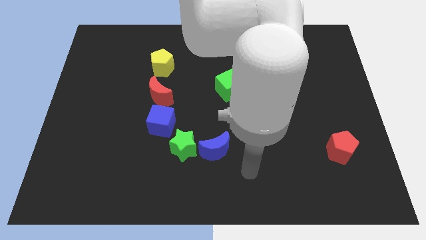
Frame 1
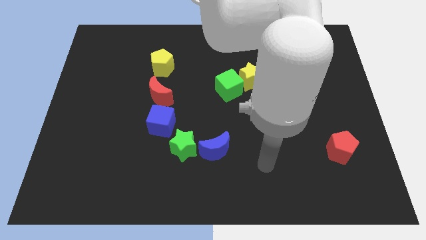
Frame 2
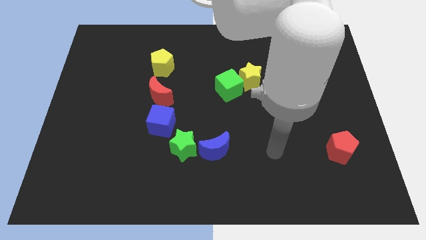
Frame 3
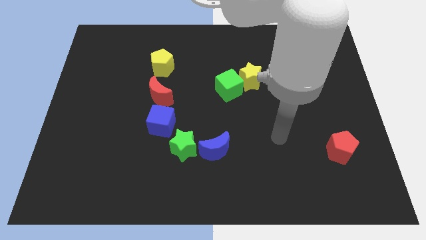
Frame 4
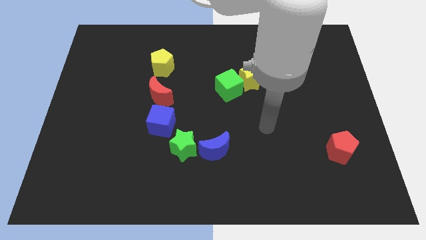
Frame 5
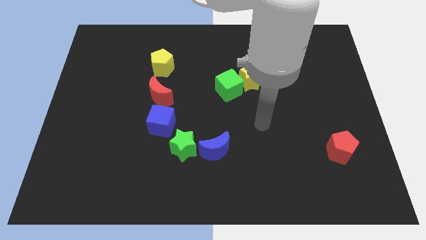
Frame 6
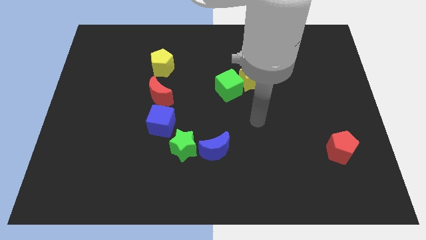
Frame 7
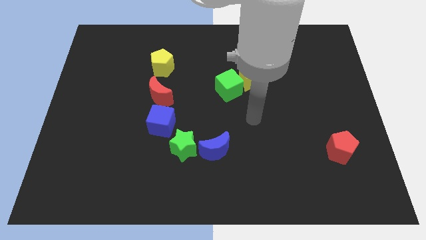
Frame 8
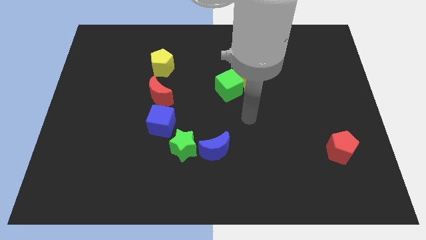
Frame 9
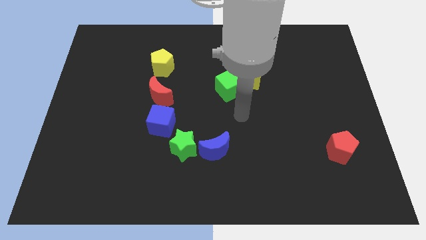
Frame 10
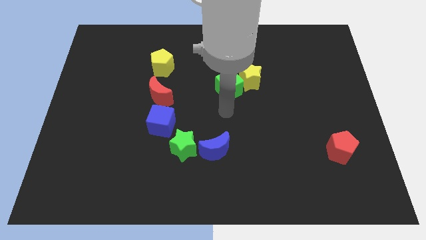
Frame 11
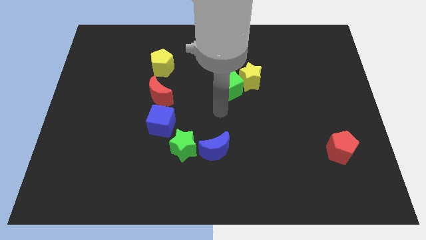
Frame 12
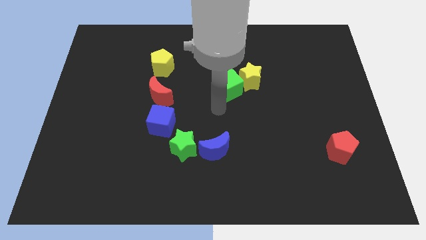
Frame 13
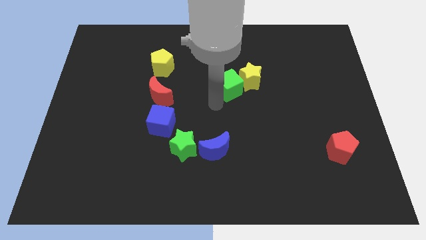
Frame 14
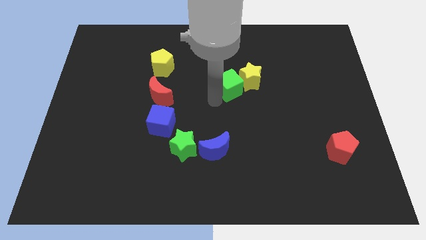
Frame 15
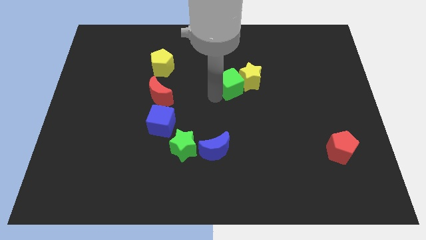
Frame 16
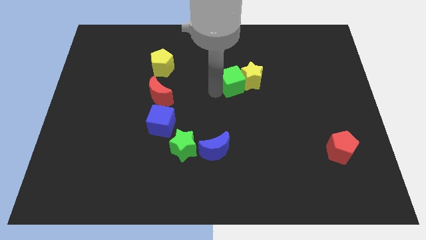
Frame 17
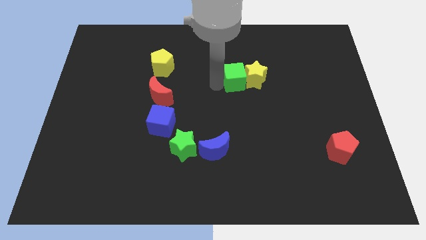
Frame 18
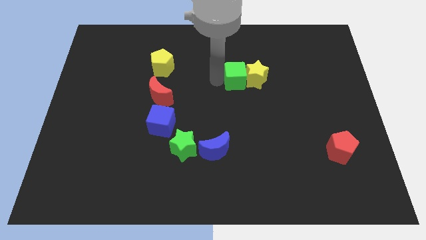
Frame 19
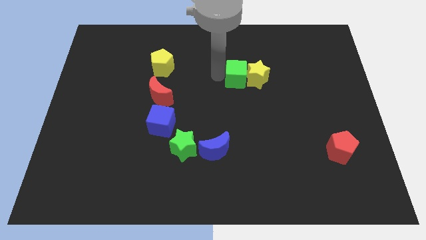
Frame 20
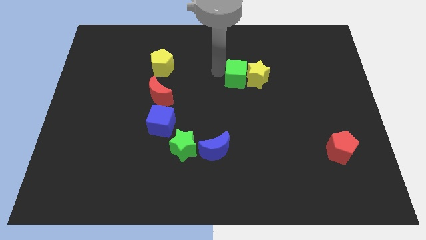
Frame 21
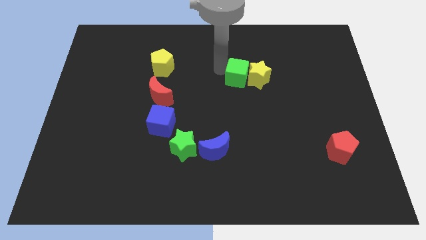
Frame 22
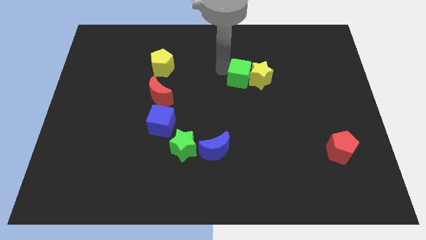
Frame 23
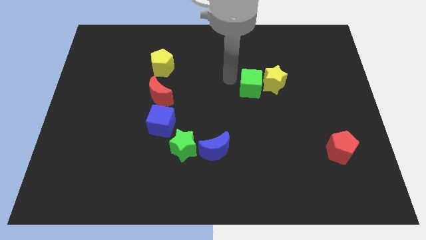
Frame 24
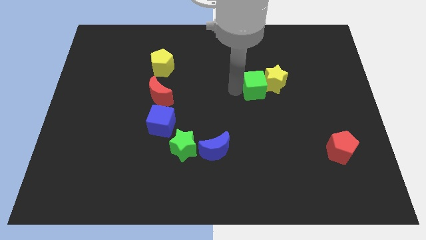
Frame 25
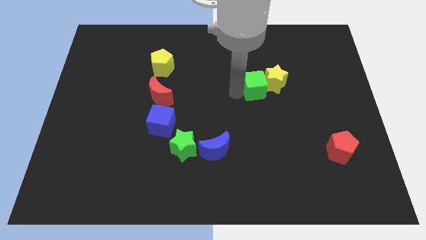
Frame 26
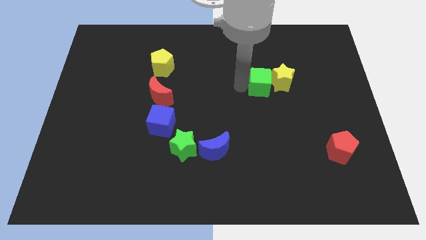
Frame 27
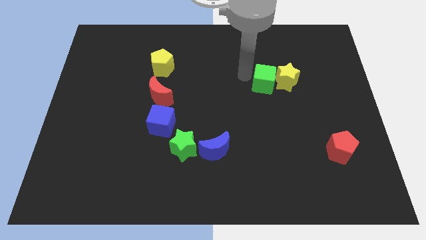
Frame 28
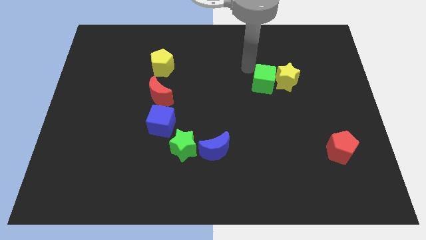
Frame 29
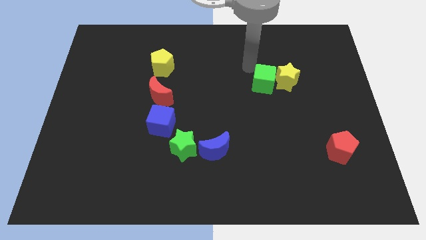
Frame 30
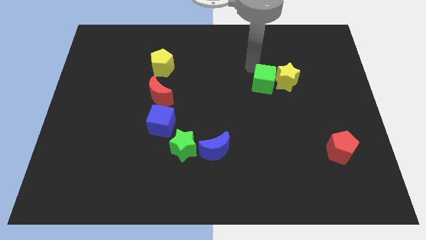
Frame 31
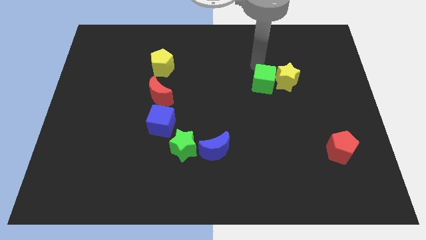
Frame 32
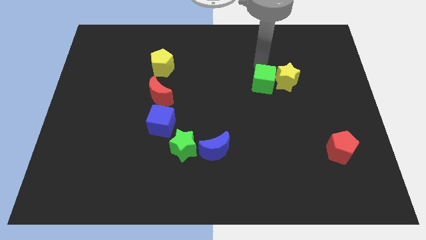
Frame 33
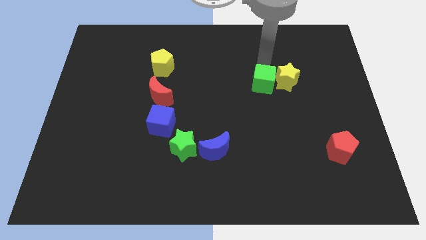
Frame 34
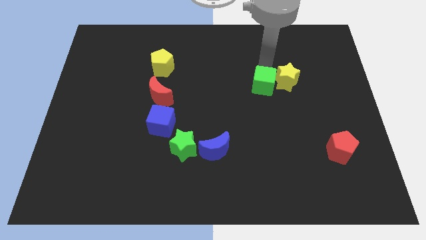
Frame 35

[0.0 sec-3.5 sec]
move the green cube and the yellow star slightly to the right

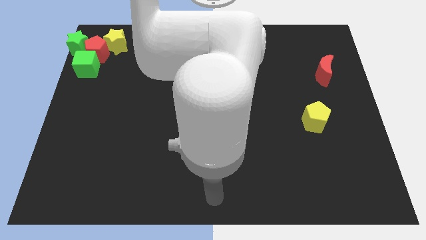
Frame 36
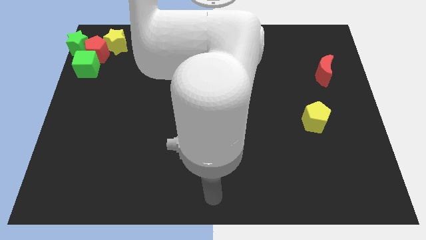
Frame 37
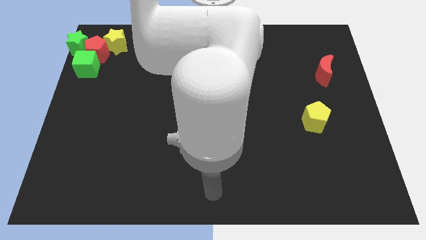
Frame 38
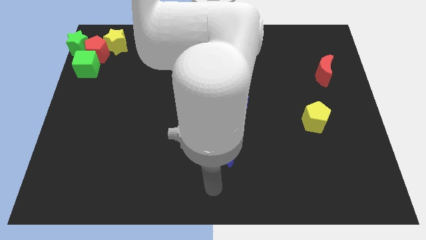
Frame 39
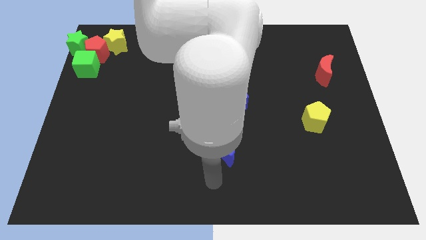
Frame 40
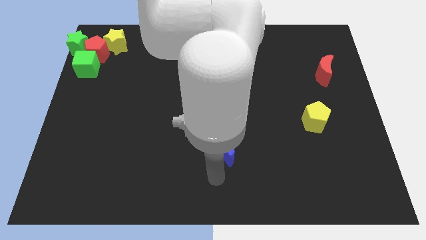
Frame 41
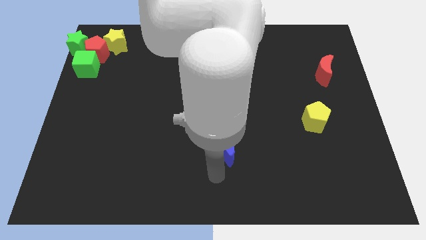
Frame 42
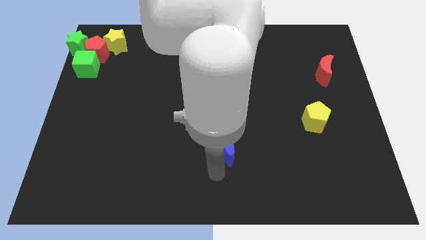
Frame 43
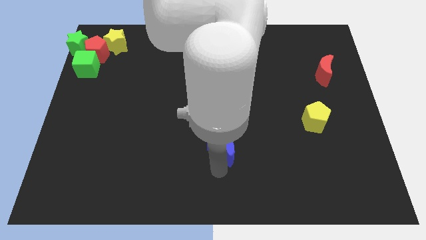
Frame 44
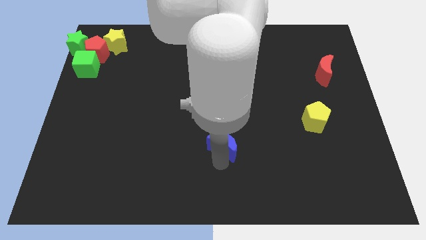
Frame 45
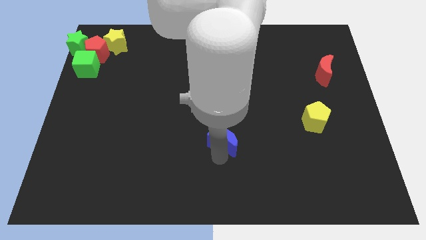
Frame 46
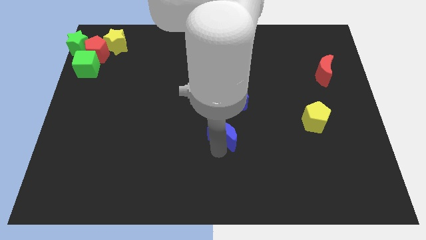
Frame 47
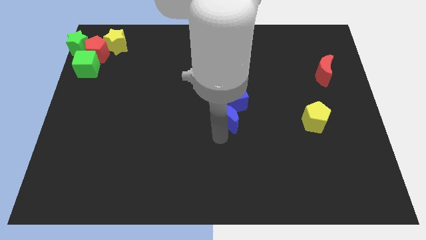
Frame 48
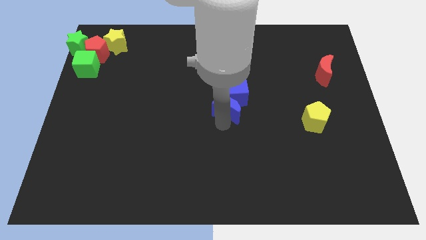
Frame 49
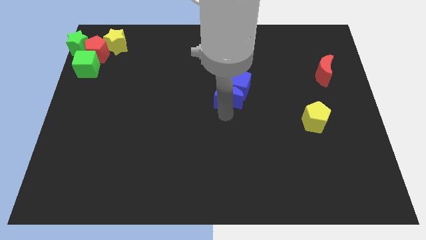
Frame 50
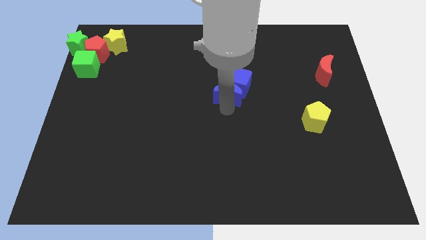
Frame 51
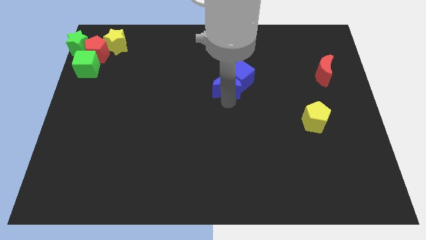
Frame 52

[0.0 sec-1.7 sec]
push the blue moon into the blue cube

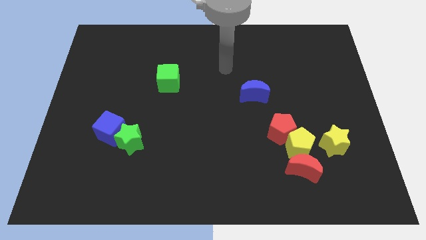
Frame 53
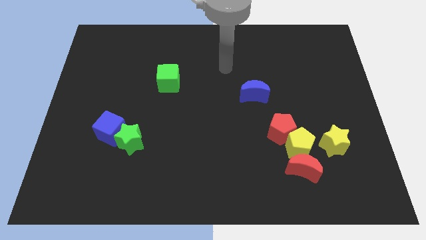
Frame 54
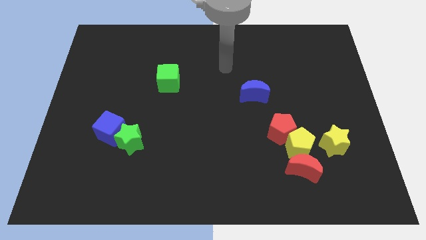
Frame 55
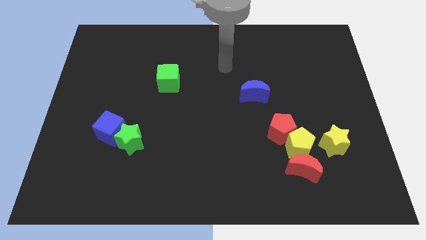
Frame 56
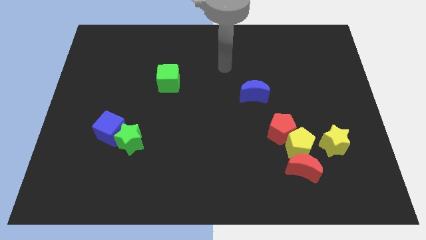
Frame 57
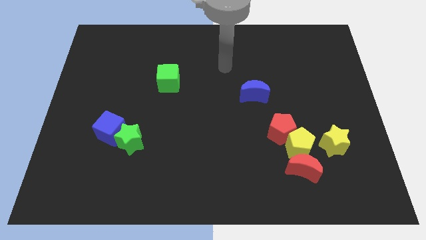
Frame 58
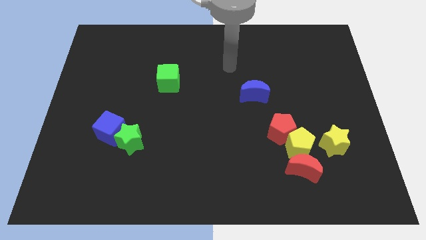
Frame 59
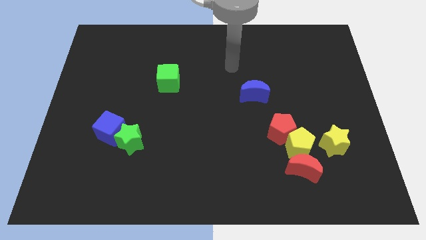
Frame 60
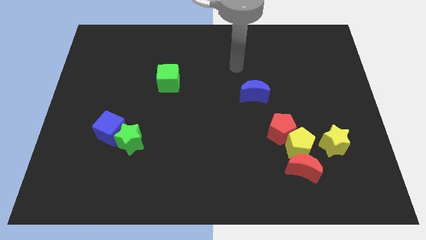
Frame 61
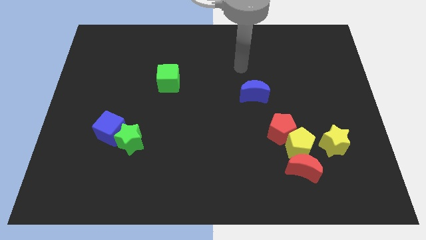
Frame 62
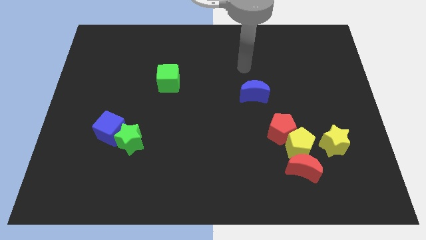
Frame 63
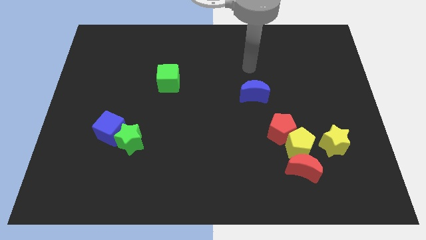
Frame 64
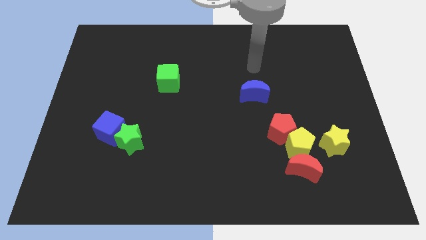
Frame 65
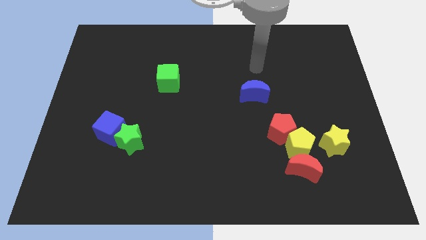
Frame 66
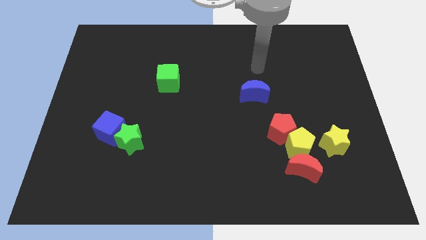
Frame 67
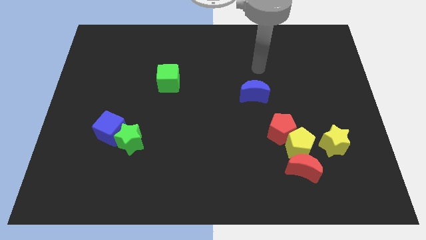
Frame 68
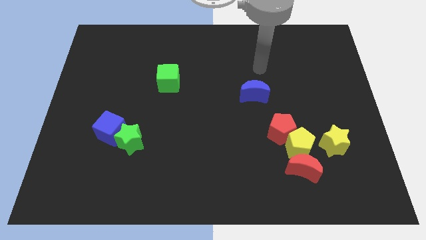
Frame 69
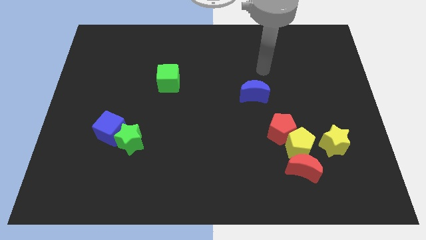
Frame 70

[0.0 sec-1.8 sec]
point your arm above blue moon

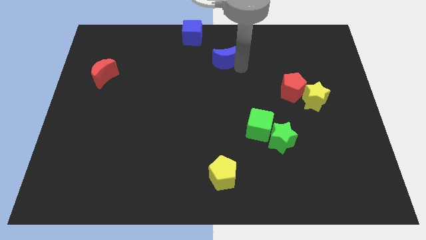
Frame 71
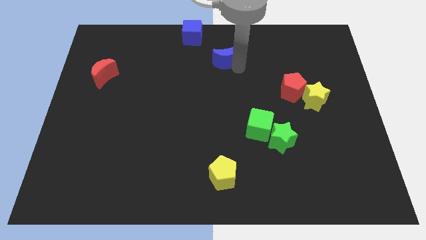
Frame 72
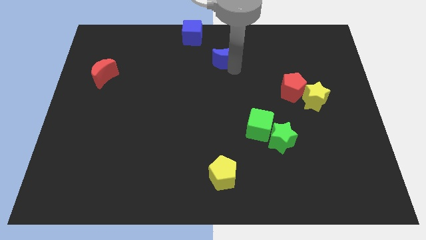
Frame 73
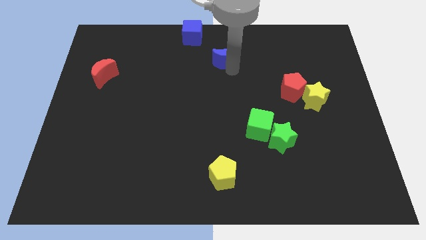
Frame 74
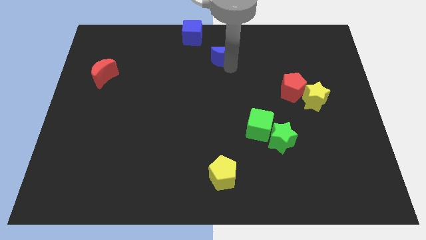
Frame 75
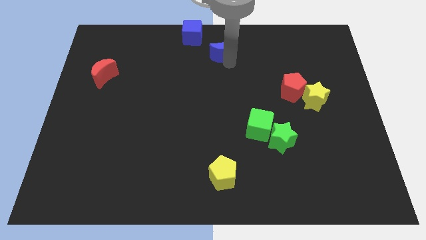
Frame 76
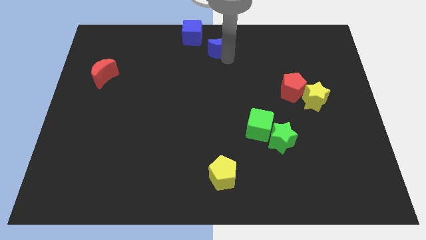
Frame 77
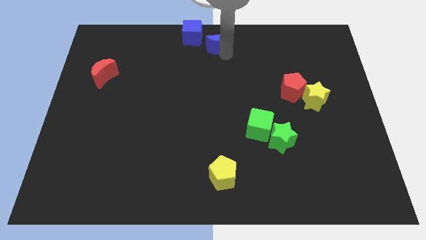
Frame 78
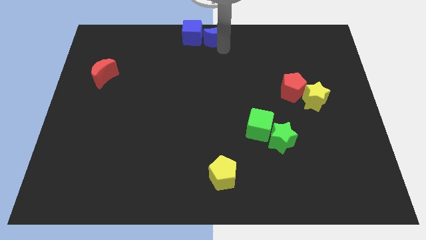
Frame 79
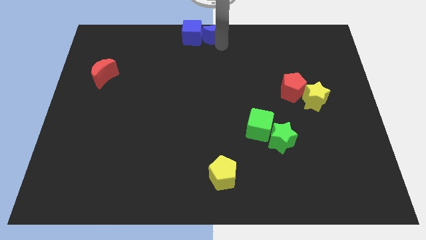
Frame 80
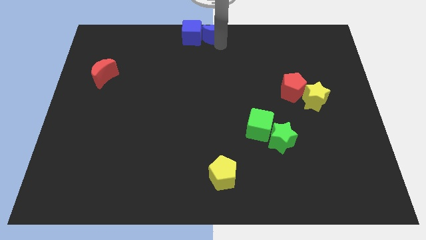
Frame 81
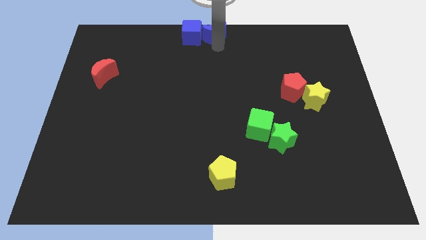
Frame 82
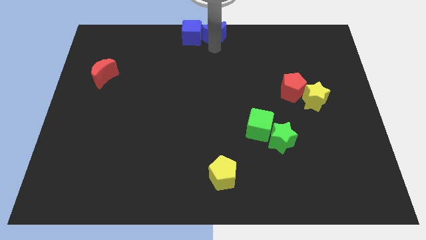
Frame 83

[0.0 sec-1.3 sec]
place the blue moon right to the blue cube

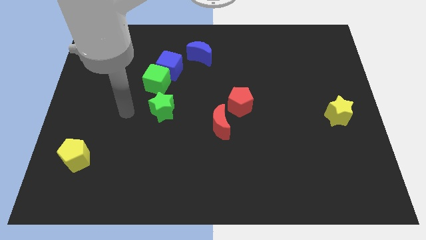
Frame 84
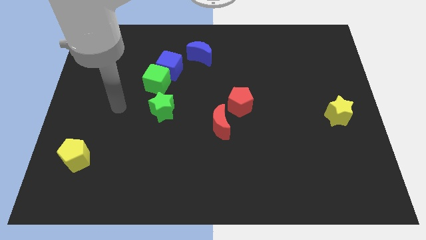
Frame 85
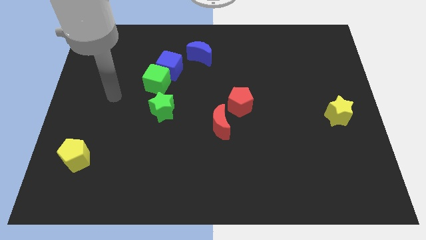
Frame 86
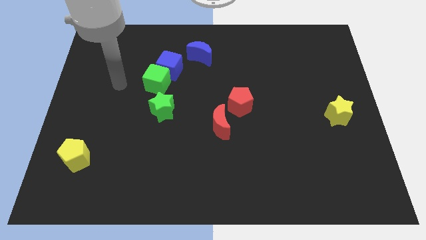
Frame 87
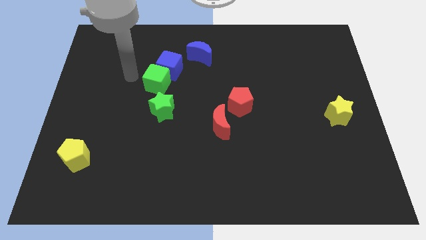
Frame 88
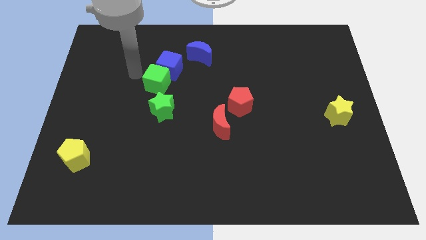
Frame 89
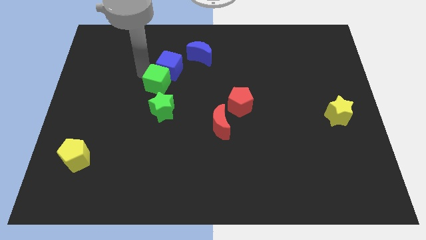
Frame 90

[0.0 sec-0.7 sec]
move your arm away from green star
